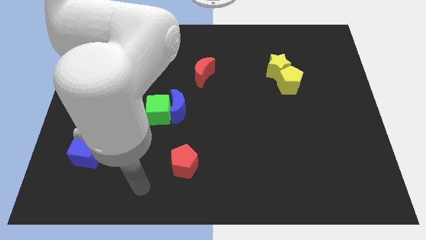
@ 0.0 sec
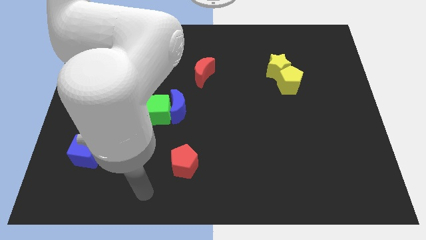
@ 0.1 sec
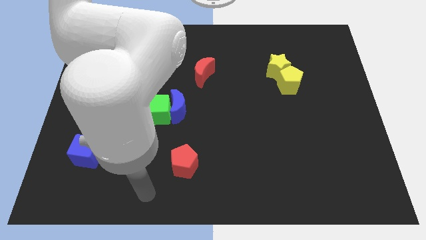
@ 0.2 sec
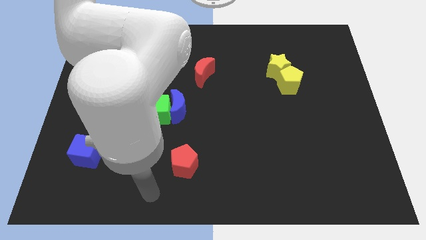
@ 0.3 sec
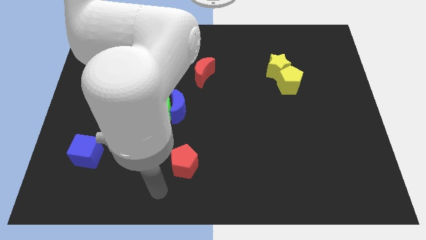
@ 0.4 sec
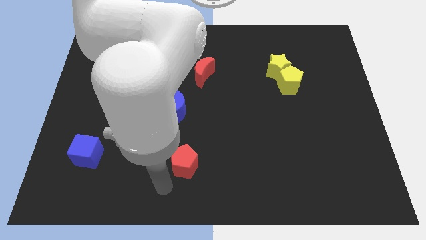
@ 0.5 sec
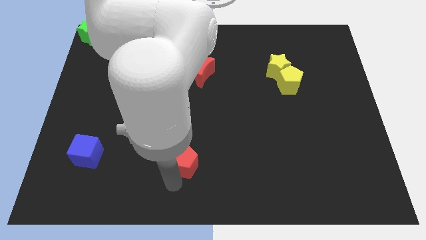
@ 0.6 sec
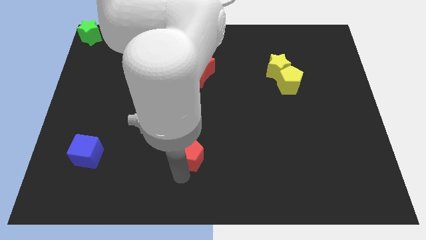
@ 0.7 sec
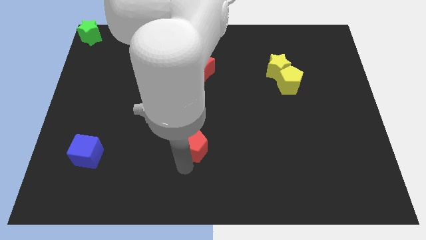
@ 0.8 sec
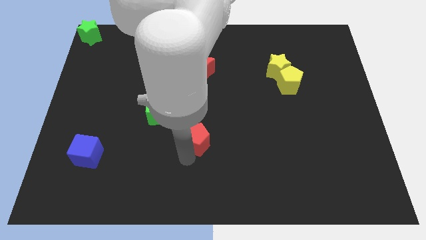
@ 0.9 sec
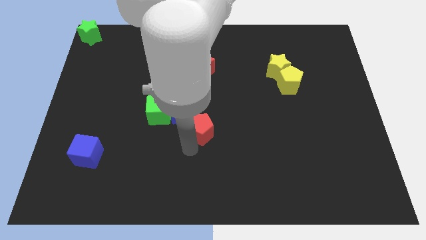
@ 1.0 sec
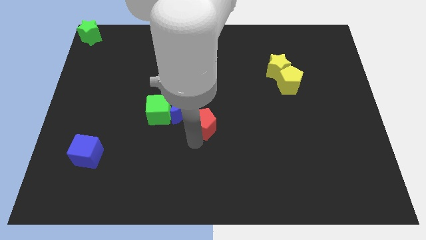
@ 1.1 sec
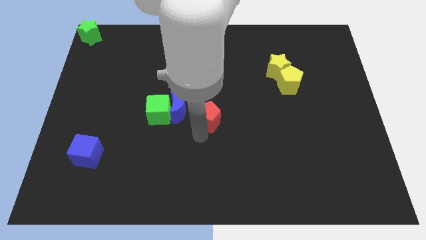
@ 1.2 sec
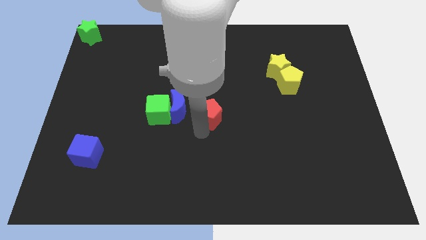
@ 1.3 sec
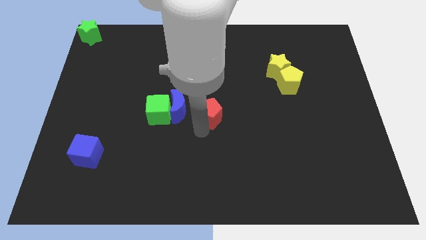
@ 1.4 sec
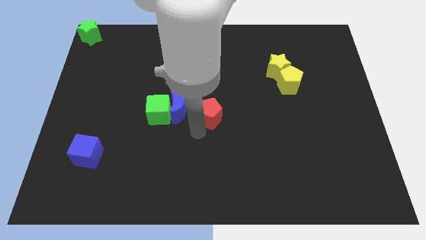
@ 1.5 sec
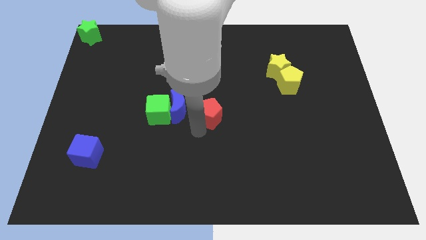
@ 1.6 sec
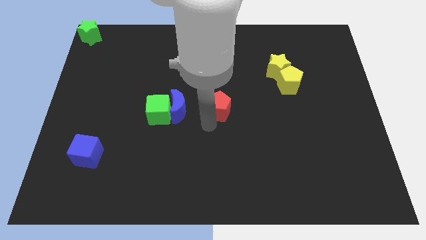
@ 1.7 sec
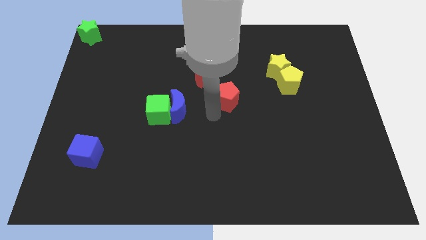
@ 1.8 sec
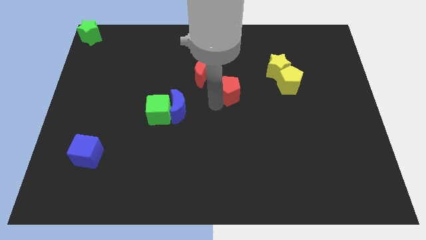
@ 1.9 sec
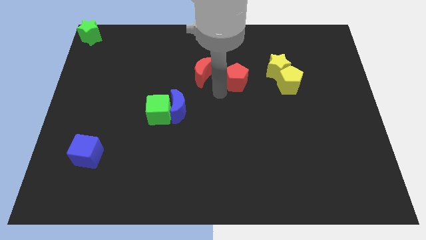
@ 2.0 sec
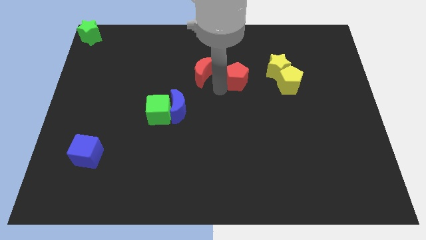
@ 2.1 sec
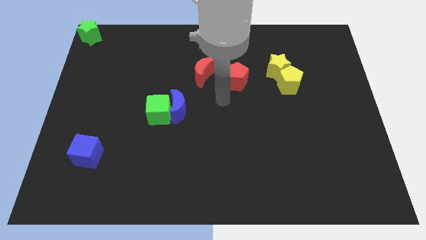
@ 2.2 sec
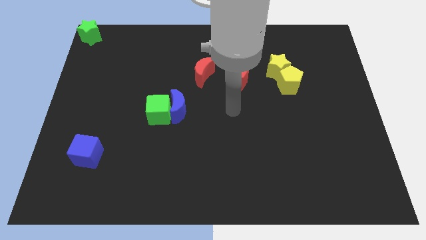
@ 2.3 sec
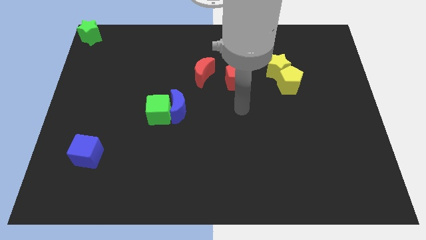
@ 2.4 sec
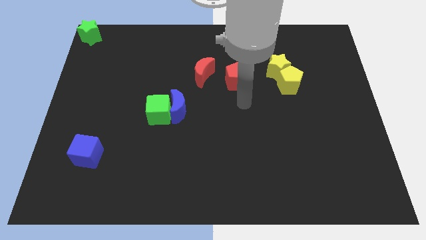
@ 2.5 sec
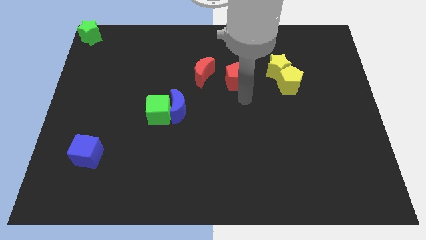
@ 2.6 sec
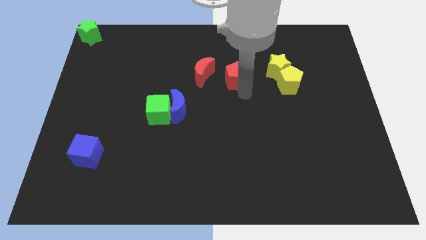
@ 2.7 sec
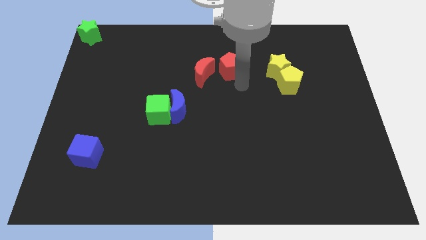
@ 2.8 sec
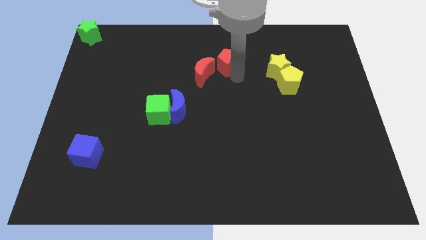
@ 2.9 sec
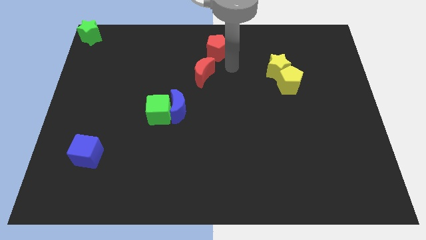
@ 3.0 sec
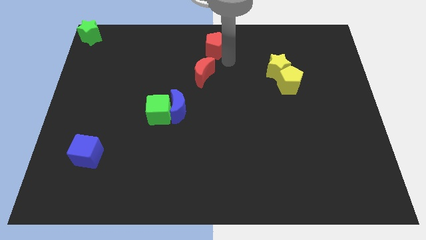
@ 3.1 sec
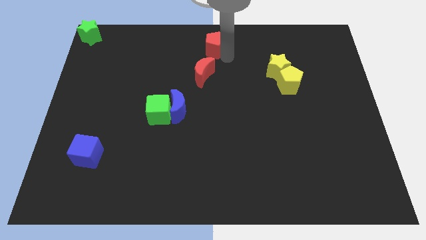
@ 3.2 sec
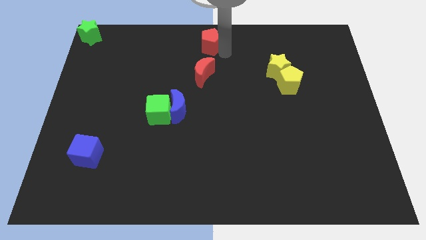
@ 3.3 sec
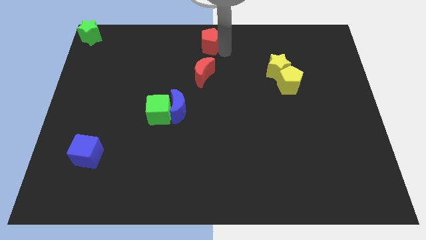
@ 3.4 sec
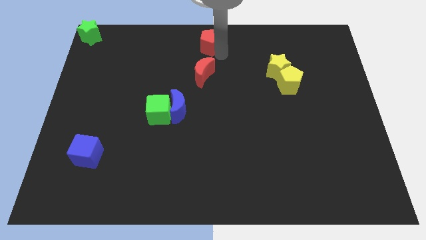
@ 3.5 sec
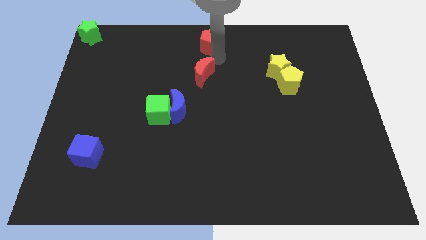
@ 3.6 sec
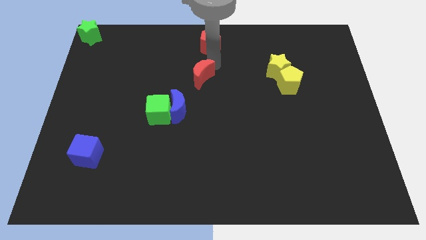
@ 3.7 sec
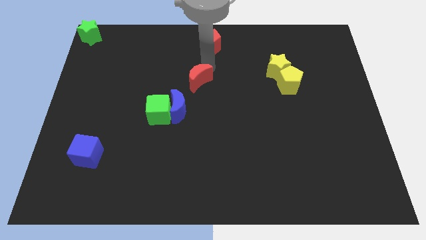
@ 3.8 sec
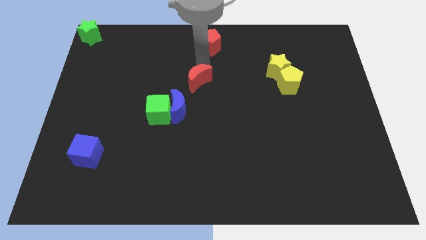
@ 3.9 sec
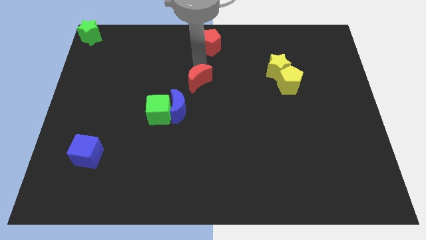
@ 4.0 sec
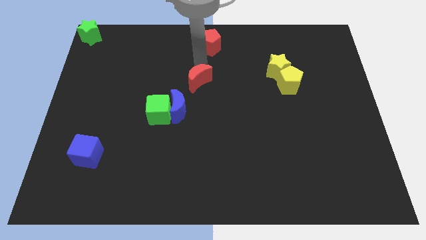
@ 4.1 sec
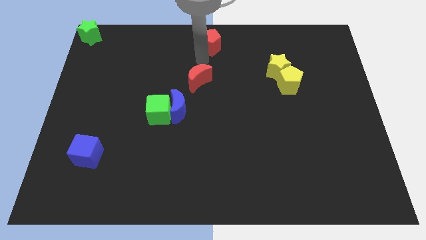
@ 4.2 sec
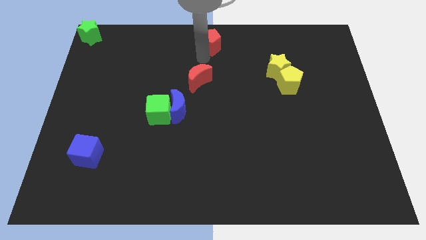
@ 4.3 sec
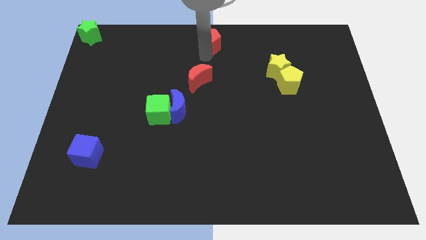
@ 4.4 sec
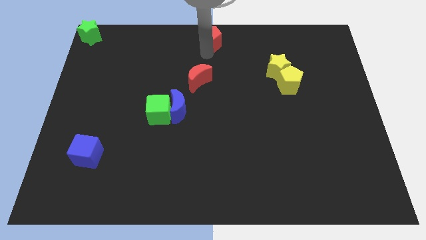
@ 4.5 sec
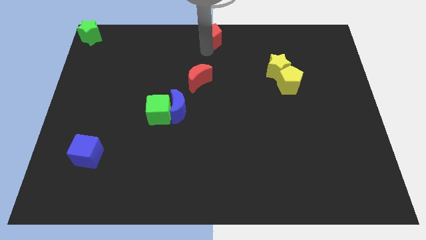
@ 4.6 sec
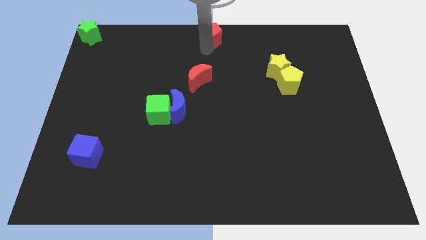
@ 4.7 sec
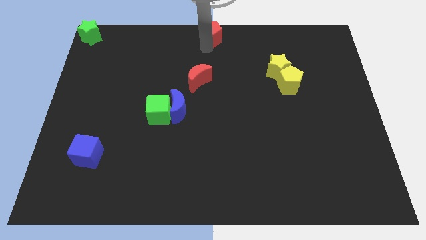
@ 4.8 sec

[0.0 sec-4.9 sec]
move the red pentagon to the top center

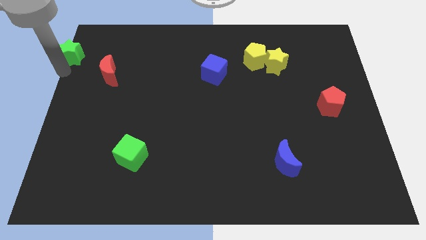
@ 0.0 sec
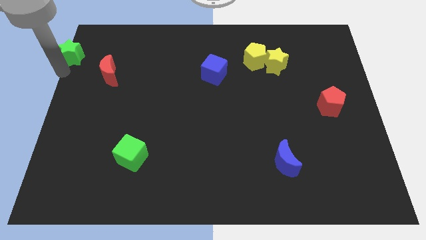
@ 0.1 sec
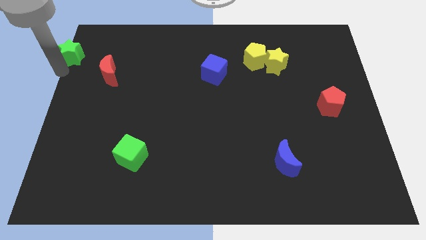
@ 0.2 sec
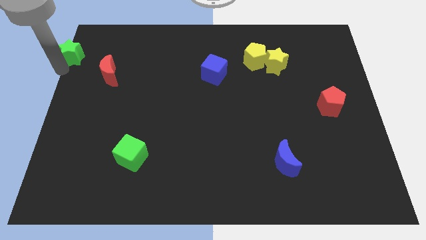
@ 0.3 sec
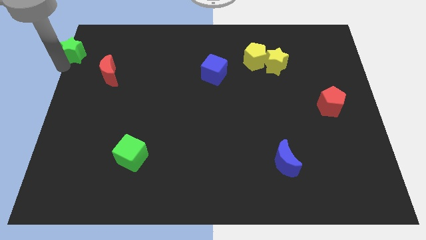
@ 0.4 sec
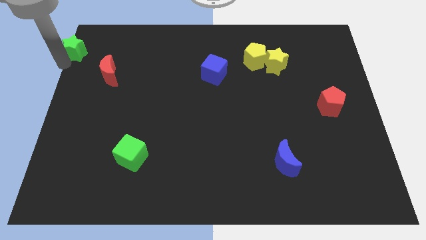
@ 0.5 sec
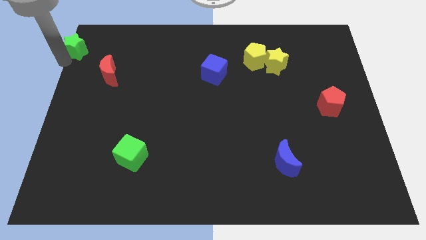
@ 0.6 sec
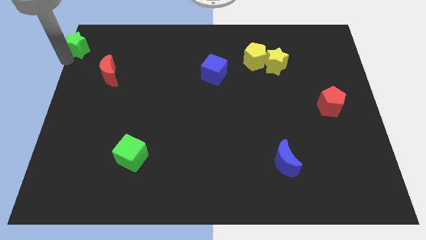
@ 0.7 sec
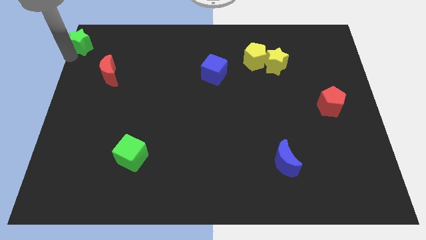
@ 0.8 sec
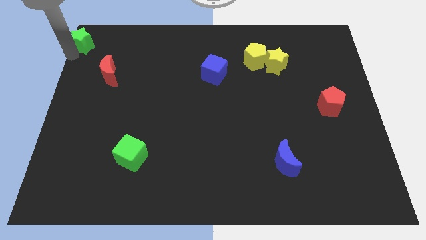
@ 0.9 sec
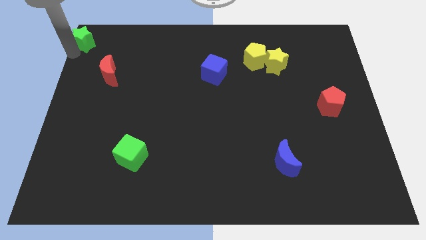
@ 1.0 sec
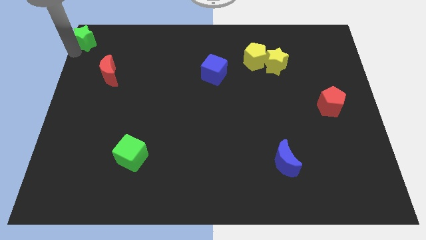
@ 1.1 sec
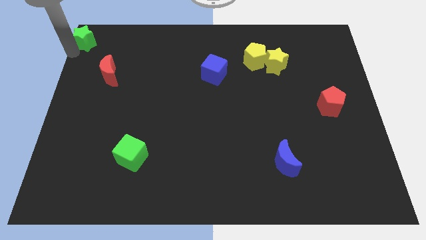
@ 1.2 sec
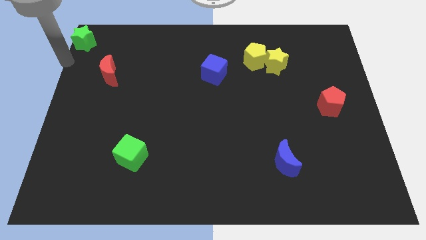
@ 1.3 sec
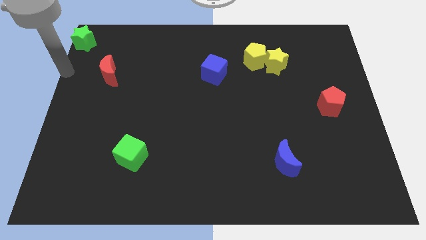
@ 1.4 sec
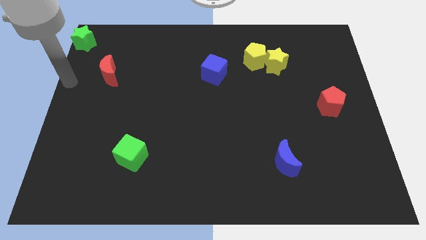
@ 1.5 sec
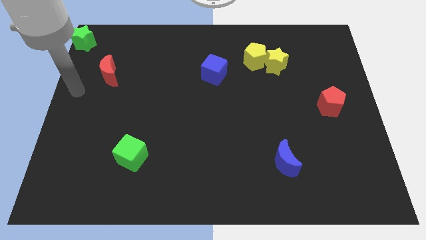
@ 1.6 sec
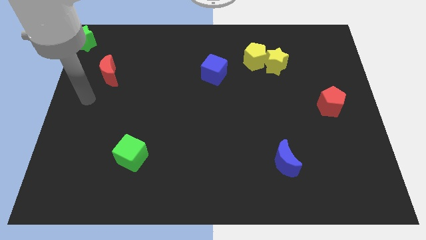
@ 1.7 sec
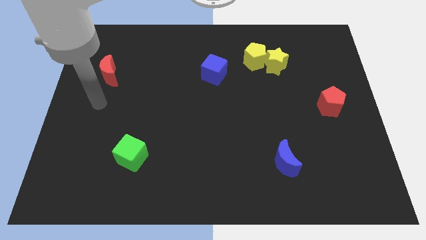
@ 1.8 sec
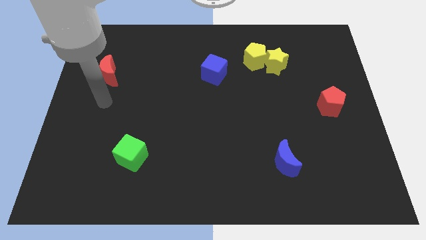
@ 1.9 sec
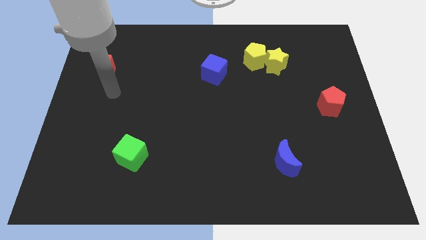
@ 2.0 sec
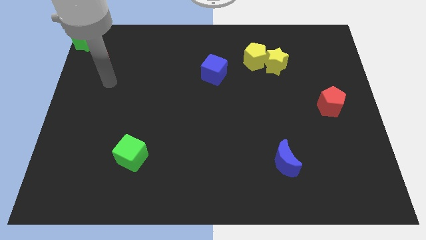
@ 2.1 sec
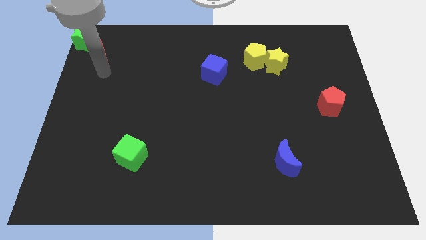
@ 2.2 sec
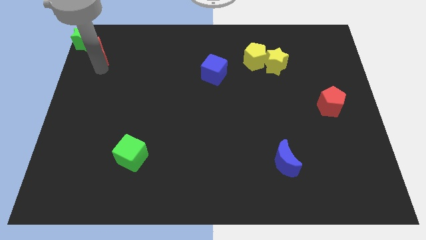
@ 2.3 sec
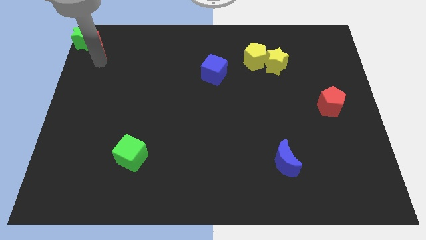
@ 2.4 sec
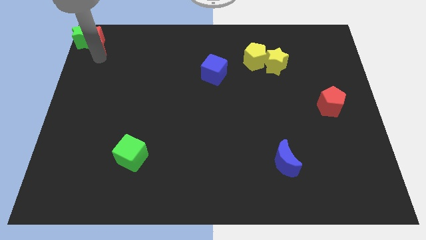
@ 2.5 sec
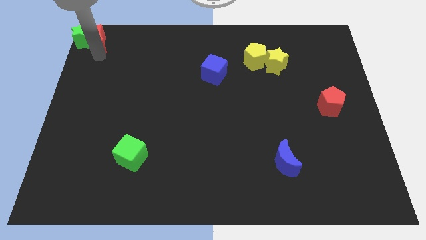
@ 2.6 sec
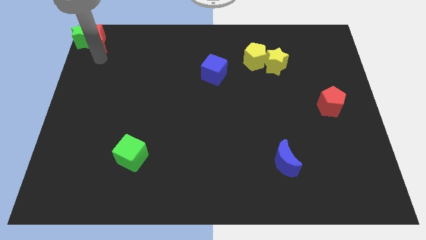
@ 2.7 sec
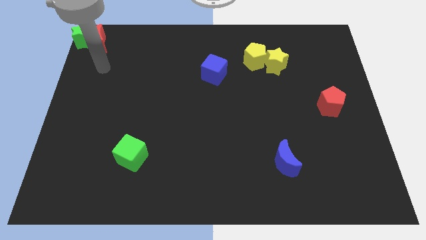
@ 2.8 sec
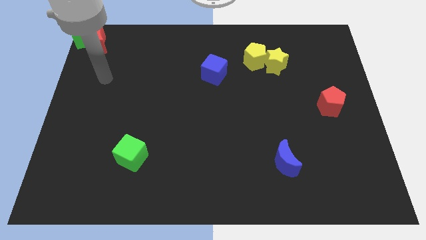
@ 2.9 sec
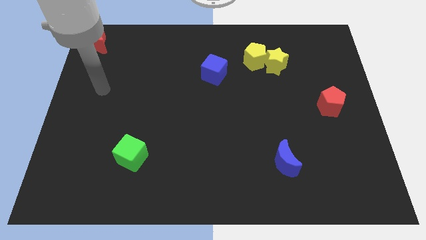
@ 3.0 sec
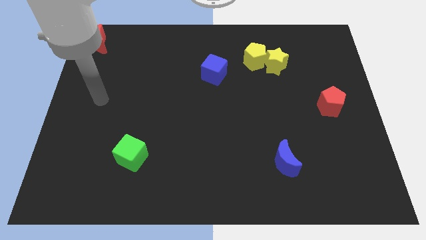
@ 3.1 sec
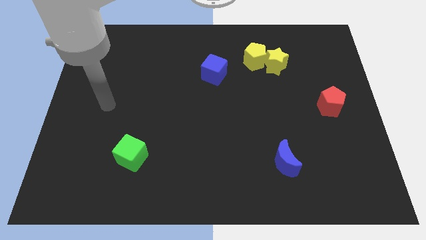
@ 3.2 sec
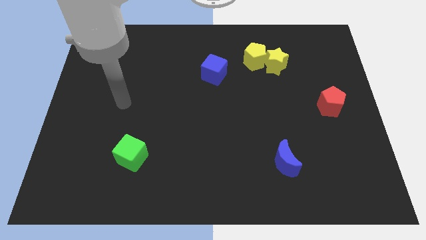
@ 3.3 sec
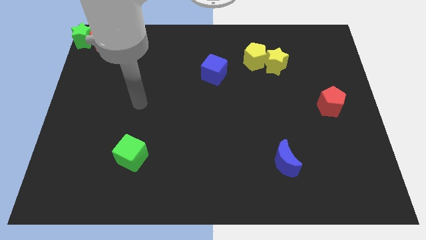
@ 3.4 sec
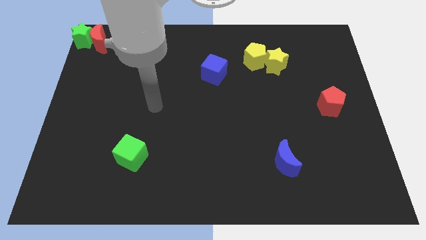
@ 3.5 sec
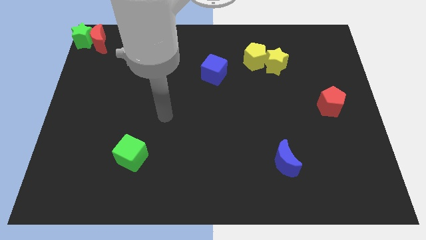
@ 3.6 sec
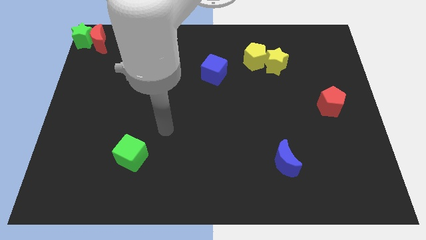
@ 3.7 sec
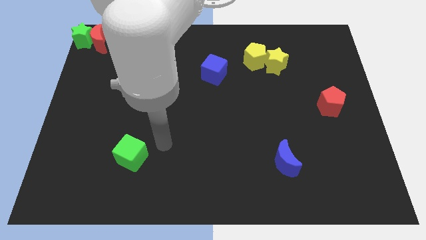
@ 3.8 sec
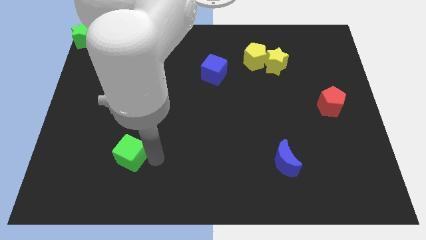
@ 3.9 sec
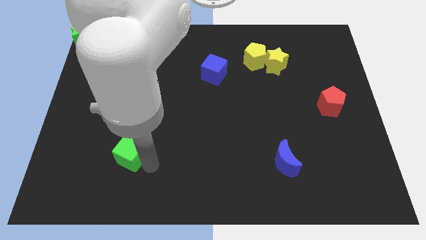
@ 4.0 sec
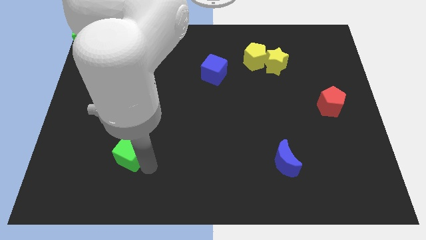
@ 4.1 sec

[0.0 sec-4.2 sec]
move the red crescent towards the green star
